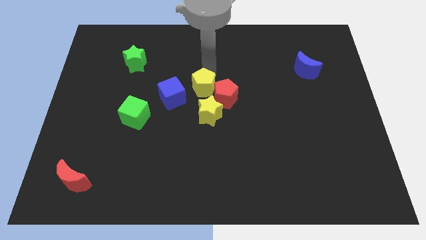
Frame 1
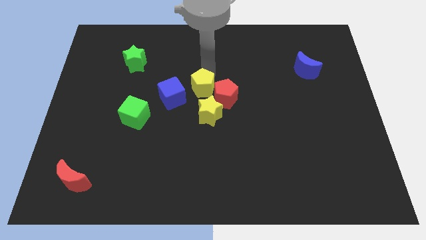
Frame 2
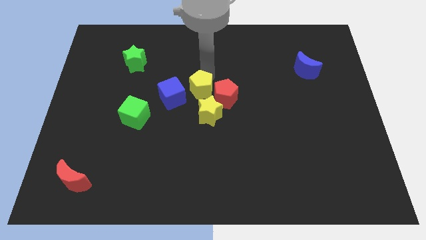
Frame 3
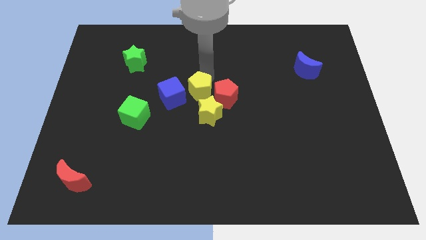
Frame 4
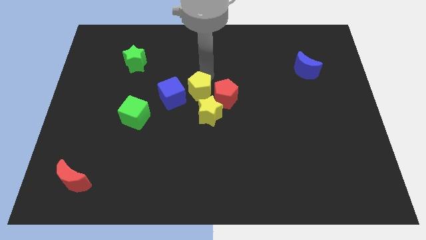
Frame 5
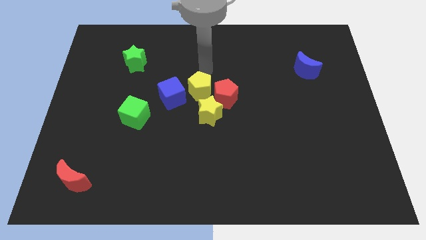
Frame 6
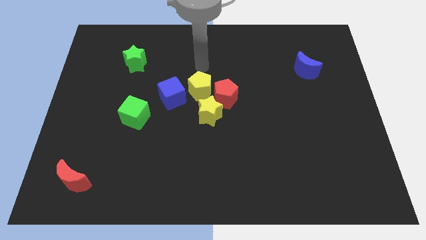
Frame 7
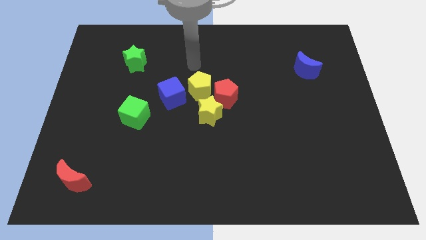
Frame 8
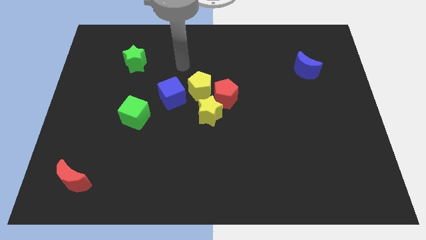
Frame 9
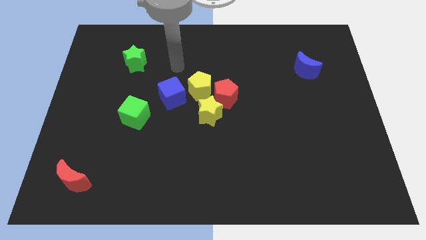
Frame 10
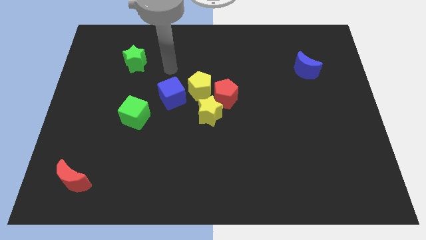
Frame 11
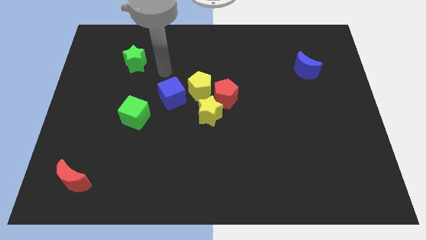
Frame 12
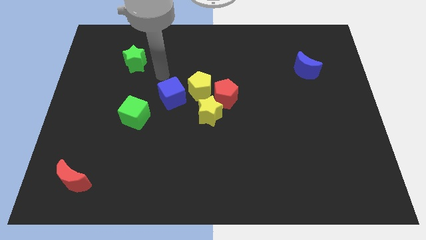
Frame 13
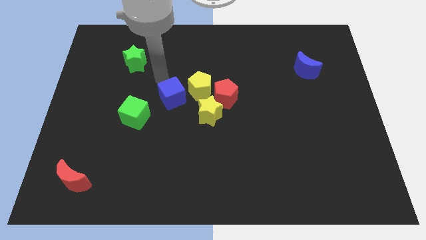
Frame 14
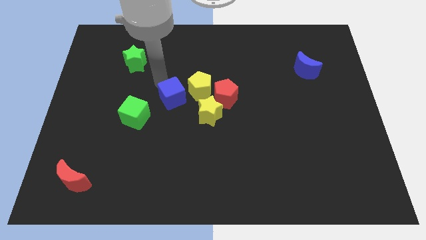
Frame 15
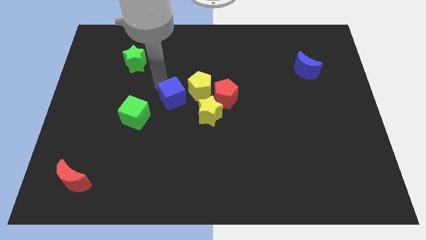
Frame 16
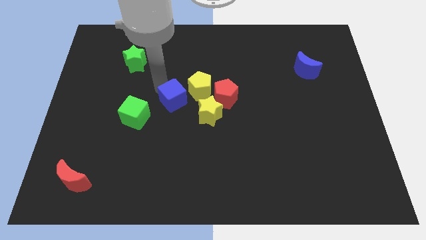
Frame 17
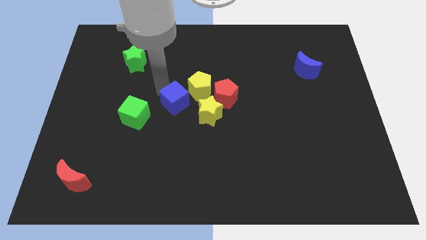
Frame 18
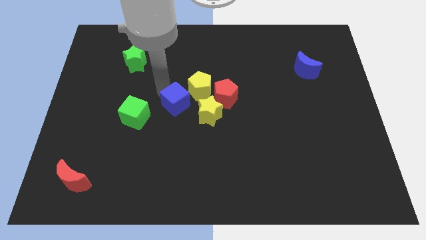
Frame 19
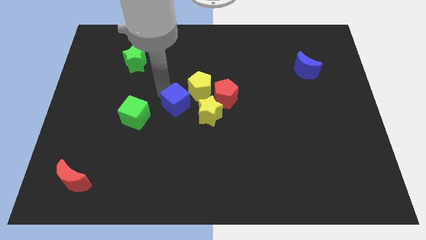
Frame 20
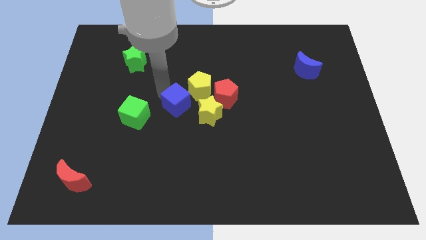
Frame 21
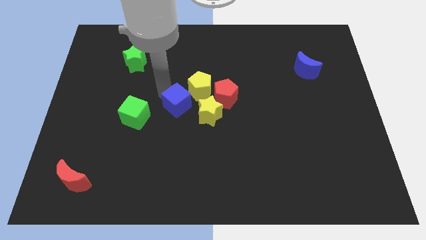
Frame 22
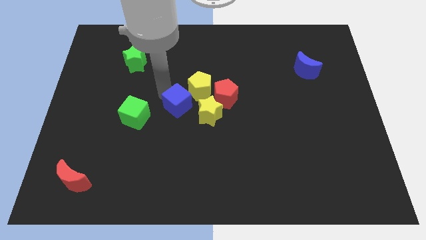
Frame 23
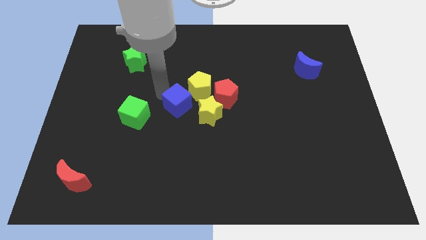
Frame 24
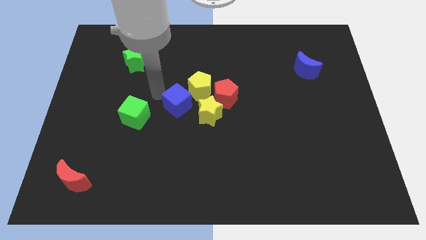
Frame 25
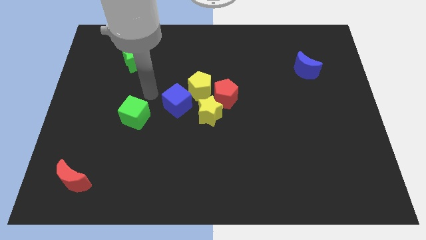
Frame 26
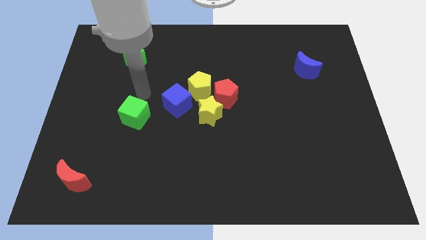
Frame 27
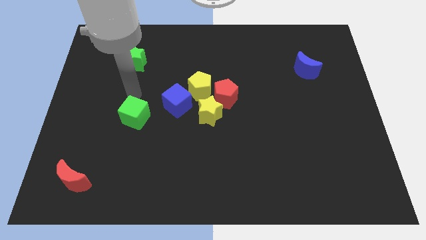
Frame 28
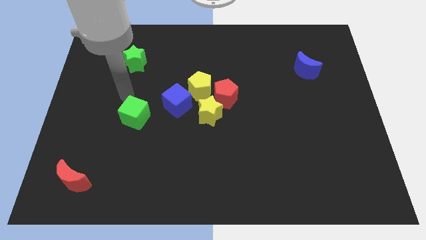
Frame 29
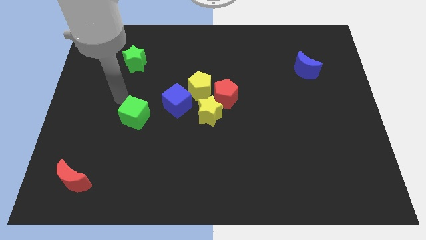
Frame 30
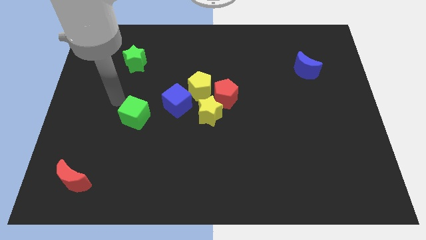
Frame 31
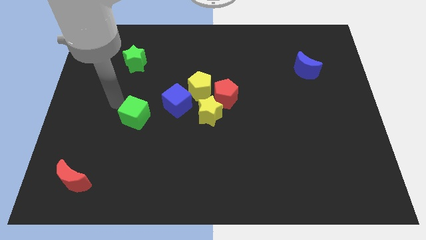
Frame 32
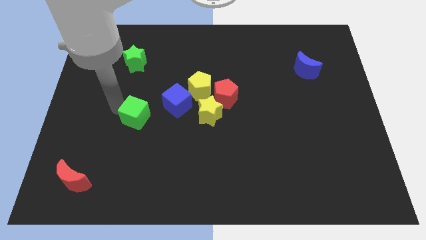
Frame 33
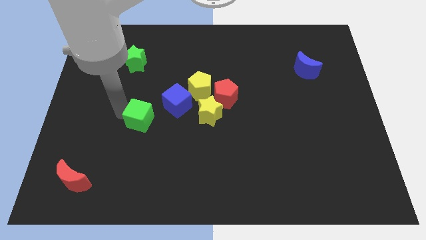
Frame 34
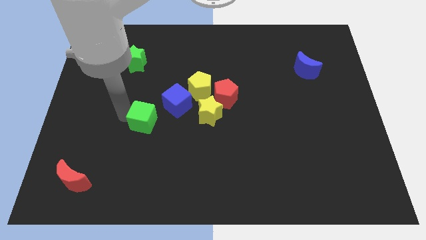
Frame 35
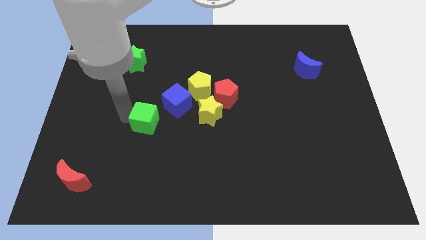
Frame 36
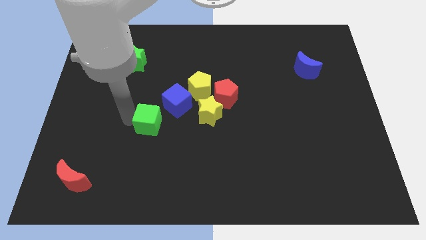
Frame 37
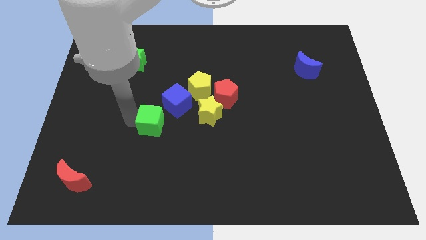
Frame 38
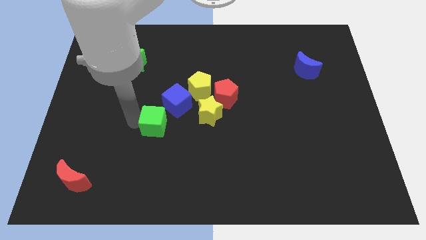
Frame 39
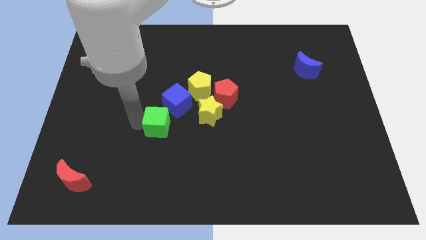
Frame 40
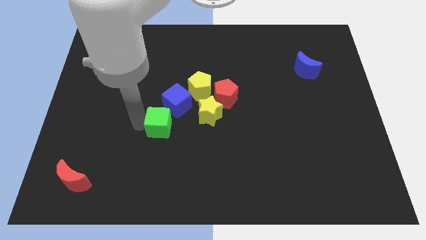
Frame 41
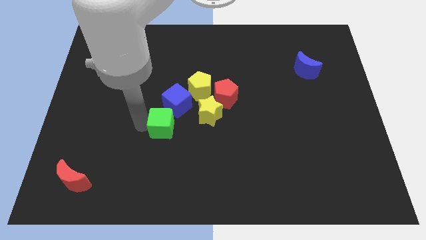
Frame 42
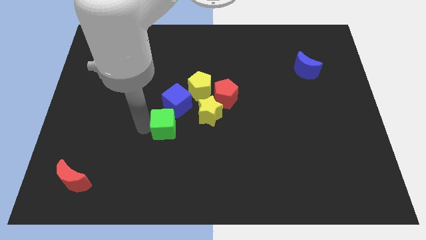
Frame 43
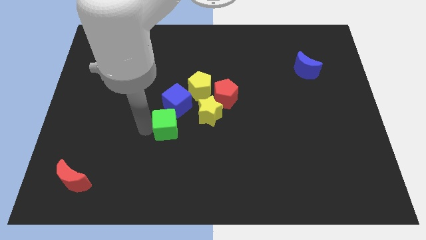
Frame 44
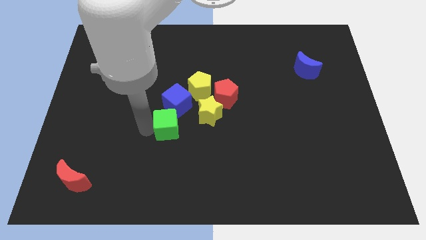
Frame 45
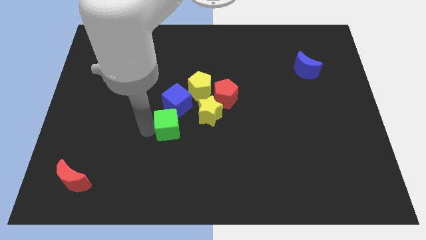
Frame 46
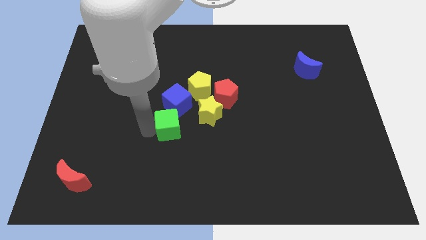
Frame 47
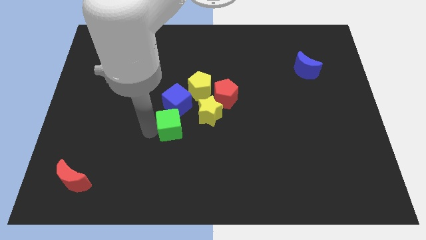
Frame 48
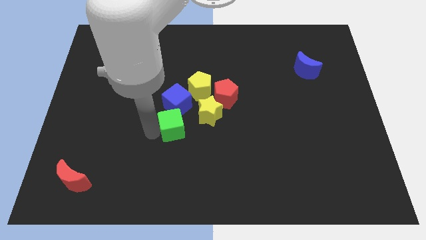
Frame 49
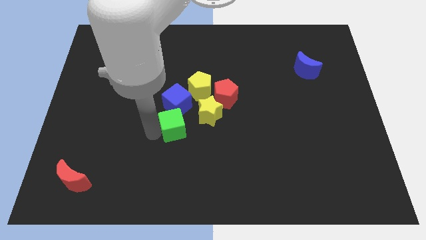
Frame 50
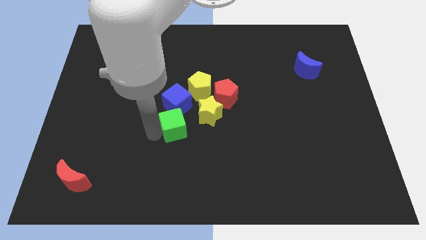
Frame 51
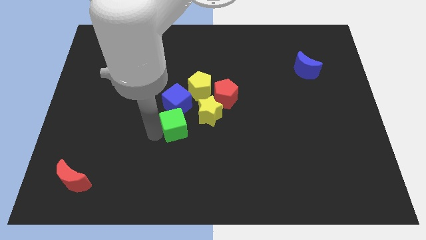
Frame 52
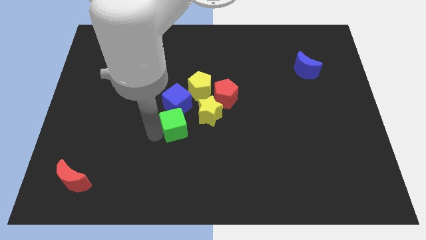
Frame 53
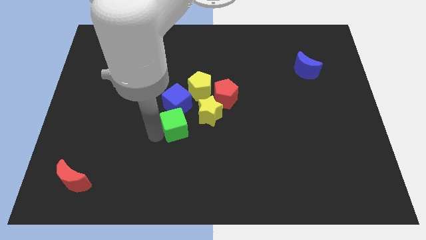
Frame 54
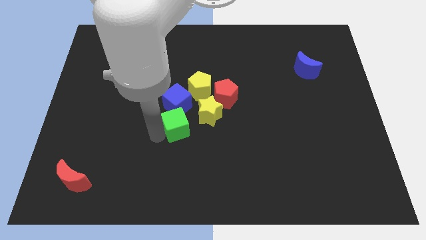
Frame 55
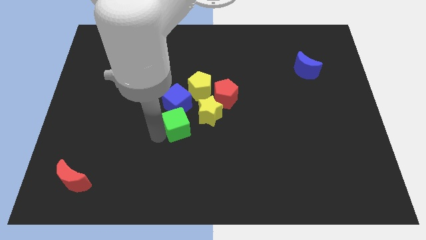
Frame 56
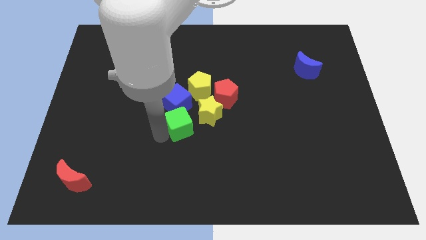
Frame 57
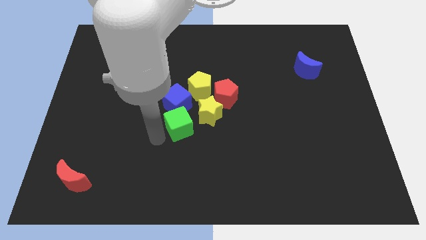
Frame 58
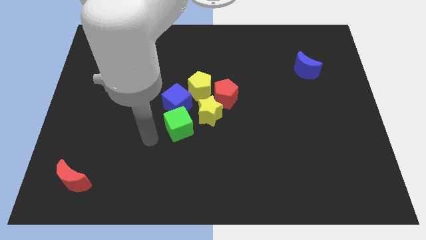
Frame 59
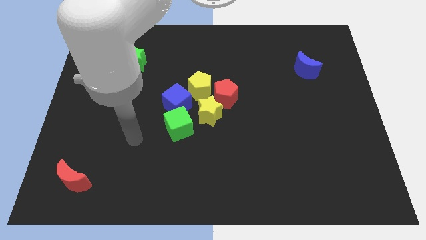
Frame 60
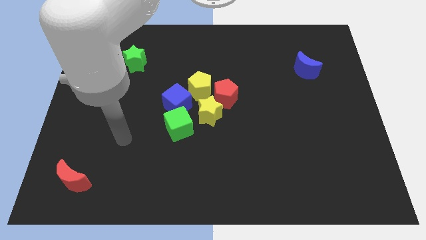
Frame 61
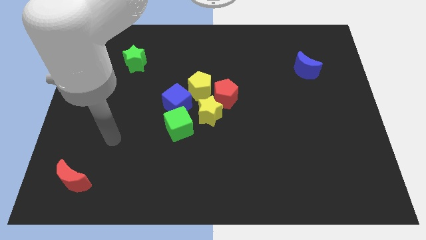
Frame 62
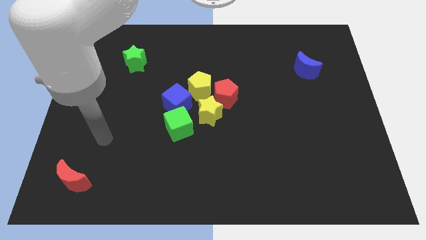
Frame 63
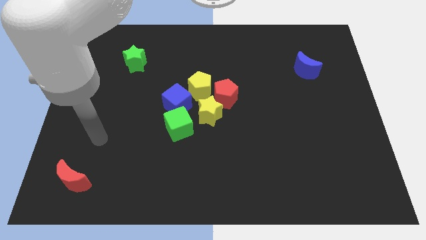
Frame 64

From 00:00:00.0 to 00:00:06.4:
form a semi circle with a group of objects in the center of the board

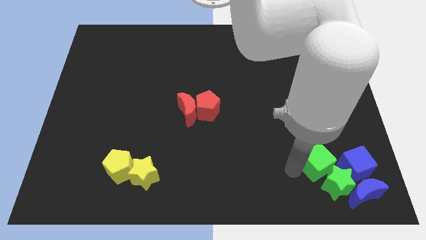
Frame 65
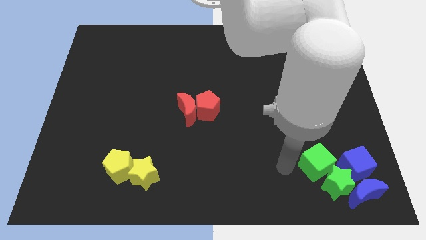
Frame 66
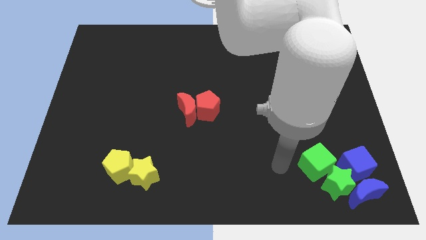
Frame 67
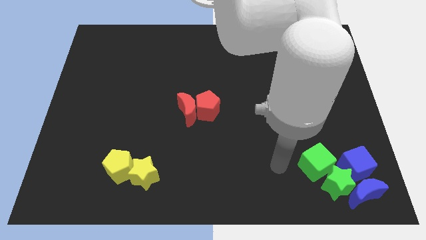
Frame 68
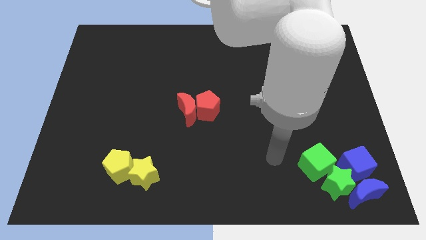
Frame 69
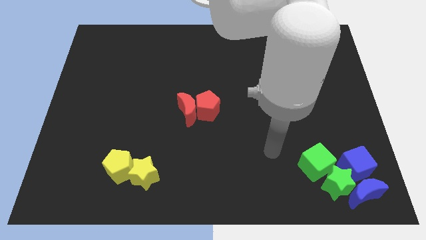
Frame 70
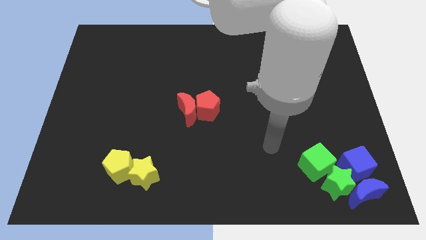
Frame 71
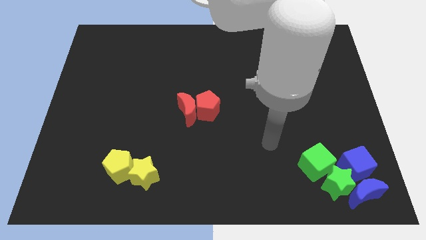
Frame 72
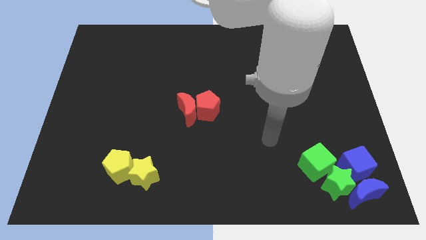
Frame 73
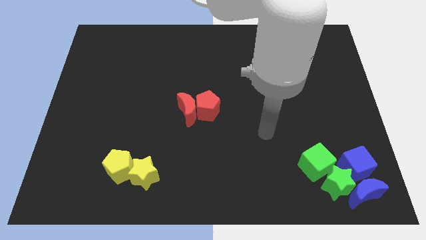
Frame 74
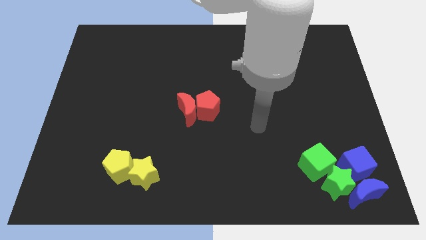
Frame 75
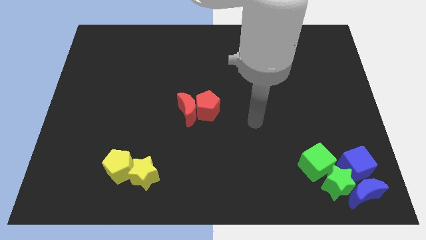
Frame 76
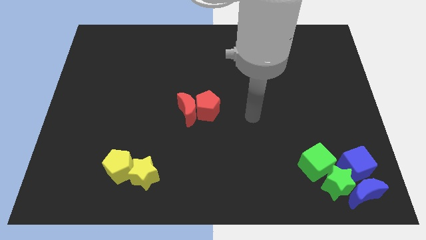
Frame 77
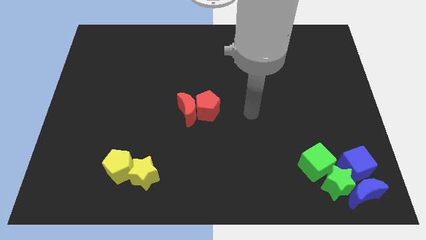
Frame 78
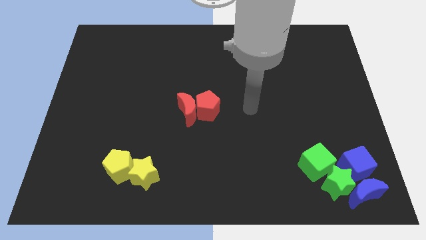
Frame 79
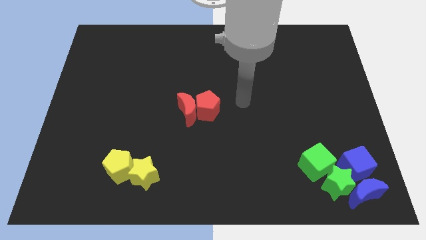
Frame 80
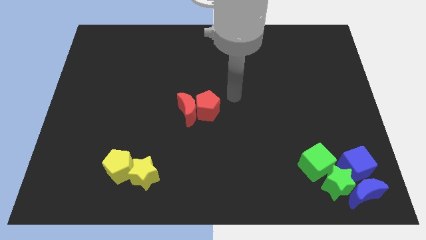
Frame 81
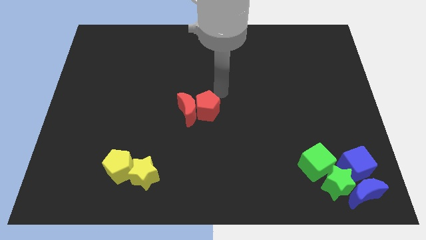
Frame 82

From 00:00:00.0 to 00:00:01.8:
go away from the group of blocks

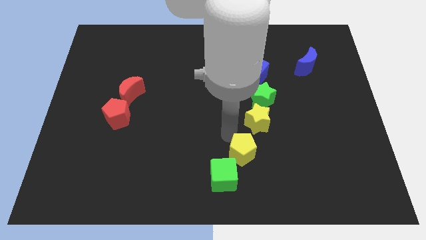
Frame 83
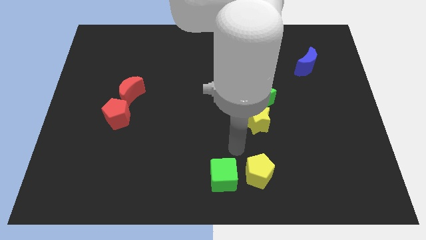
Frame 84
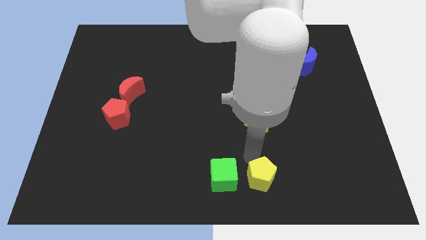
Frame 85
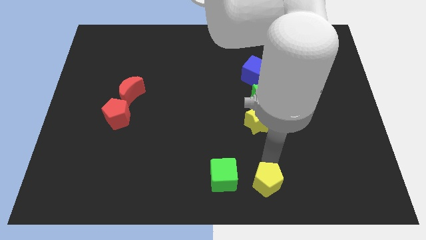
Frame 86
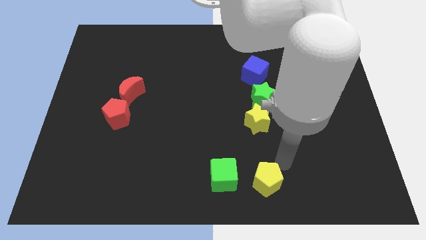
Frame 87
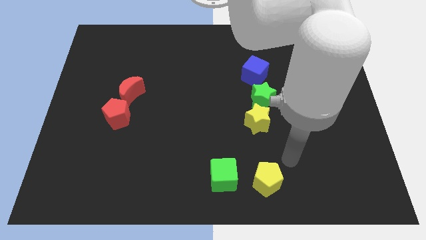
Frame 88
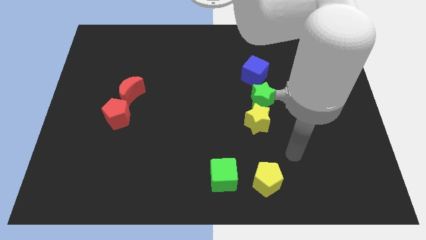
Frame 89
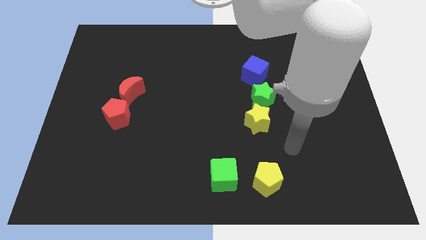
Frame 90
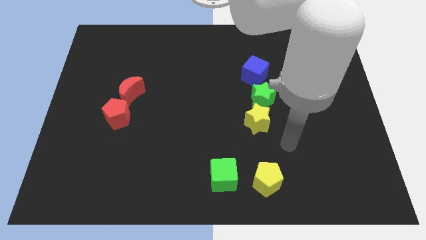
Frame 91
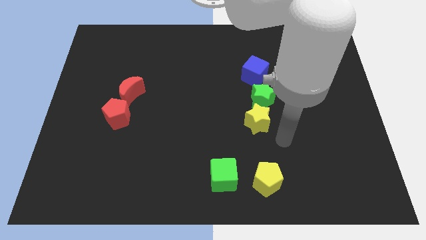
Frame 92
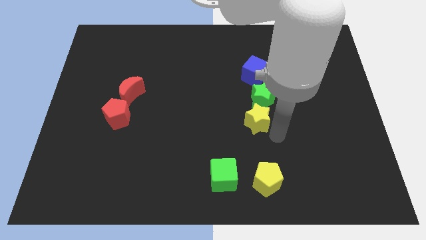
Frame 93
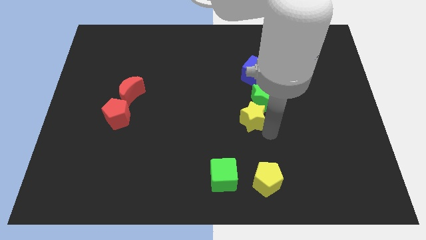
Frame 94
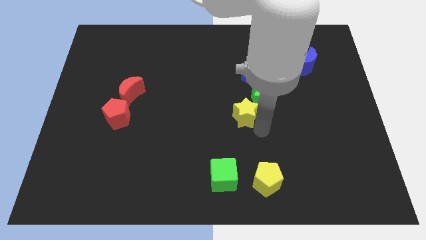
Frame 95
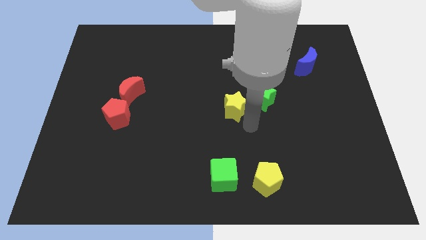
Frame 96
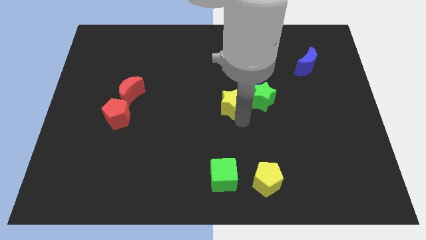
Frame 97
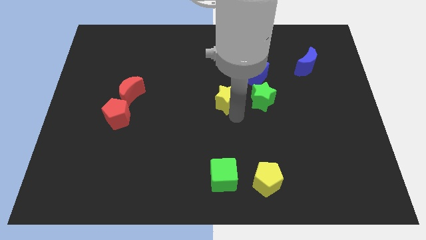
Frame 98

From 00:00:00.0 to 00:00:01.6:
separate the green cube and yellow pentagon
